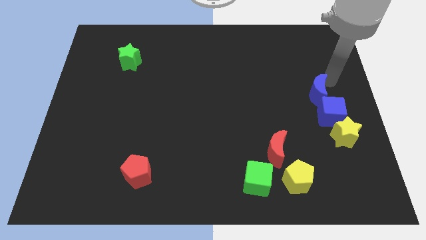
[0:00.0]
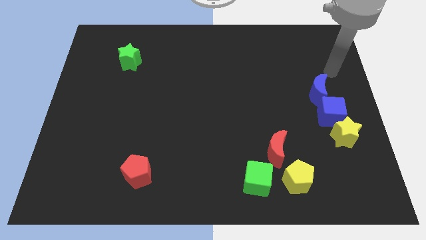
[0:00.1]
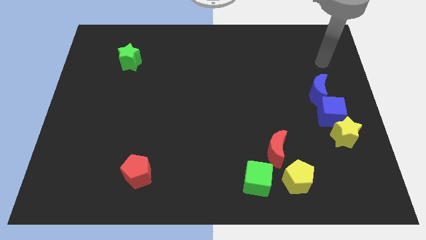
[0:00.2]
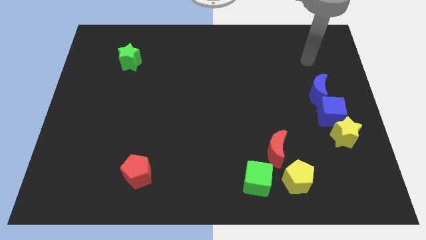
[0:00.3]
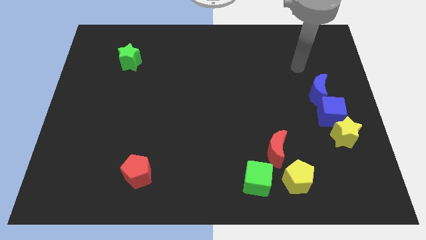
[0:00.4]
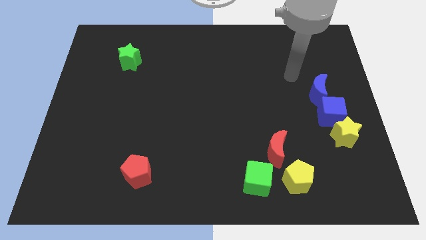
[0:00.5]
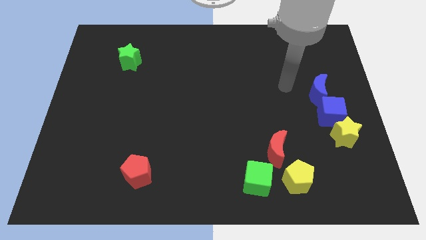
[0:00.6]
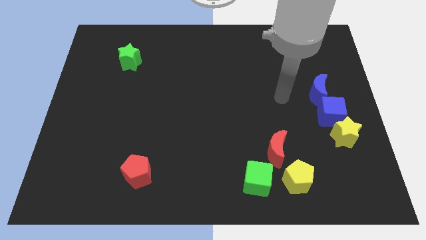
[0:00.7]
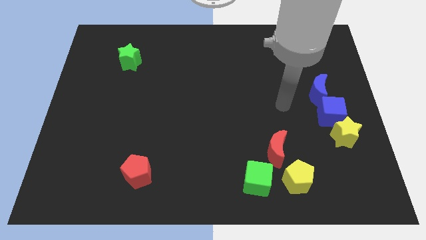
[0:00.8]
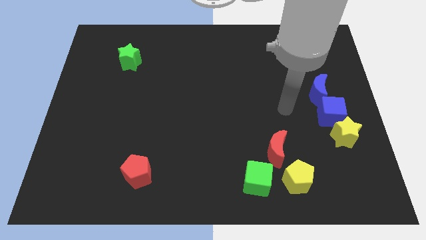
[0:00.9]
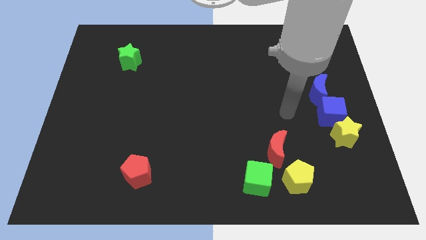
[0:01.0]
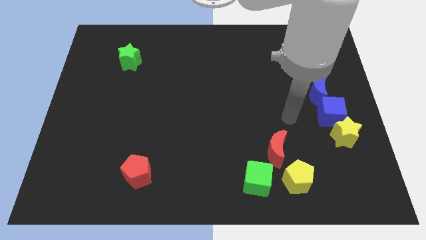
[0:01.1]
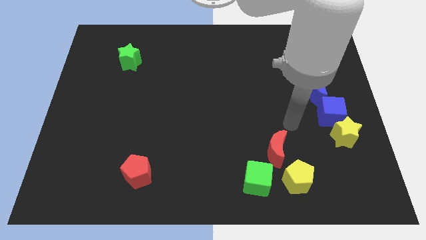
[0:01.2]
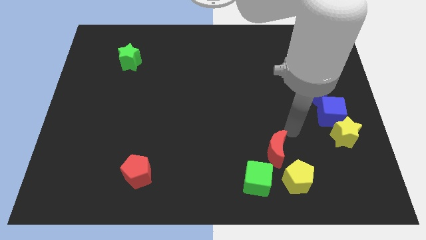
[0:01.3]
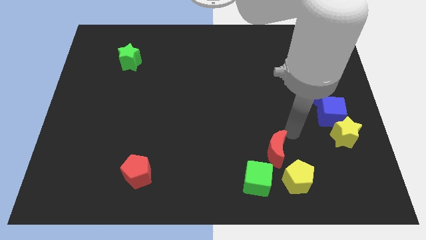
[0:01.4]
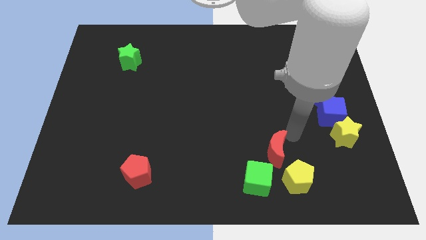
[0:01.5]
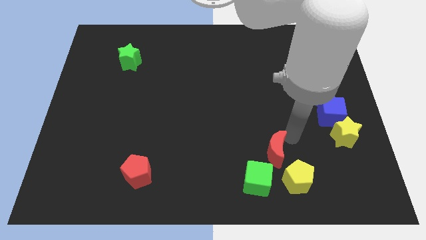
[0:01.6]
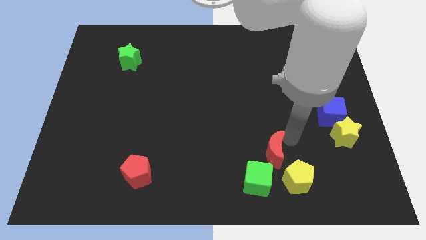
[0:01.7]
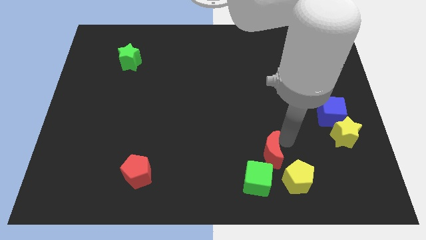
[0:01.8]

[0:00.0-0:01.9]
move the arm towards the red crescent

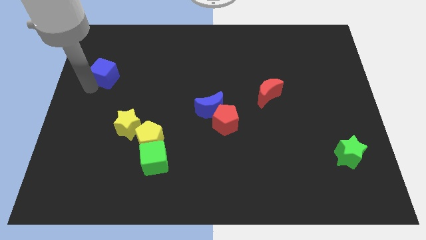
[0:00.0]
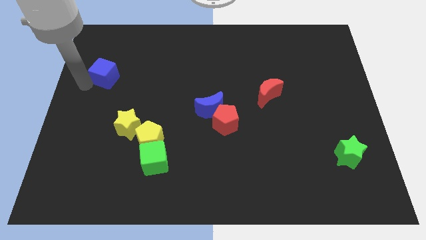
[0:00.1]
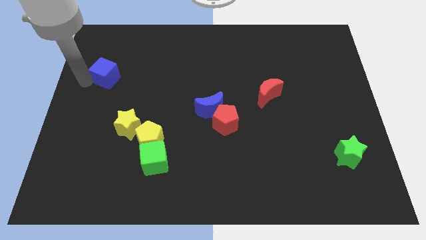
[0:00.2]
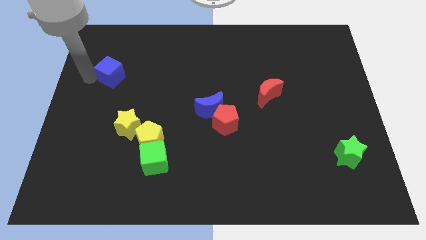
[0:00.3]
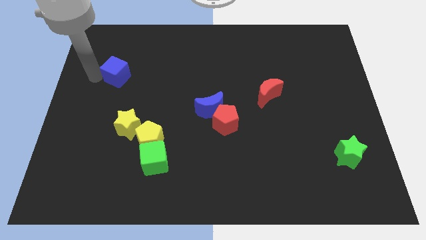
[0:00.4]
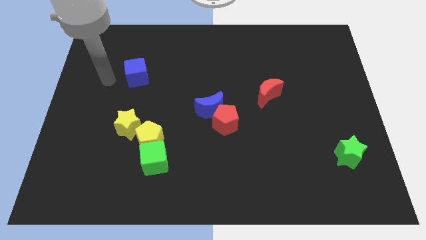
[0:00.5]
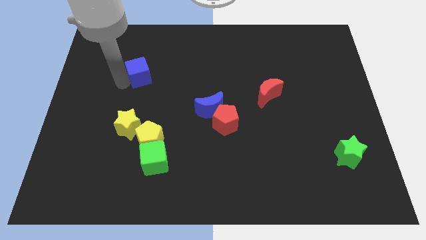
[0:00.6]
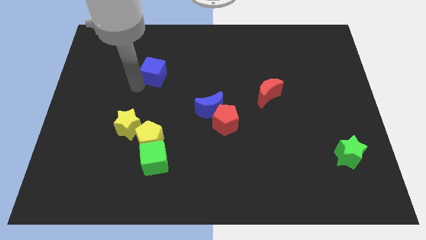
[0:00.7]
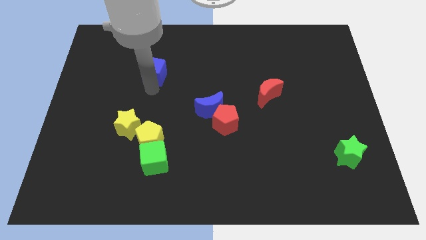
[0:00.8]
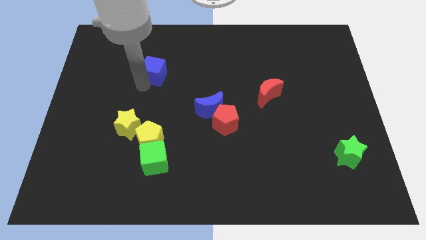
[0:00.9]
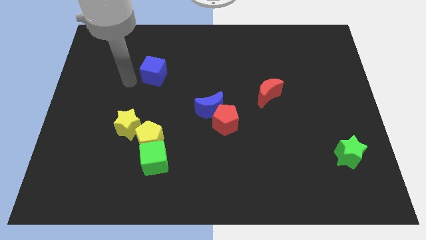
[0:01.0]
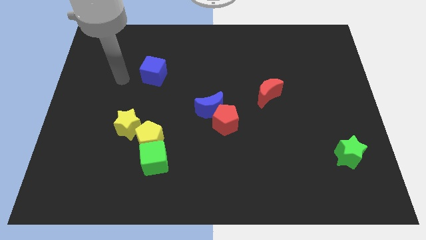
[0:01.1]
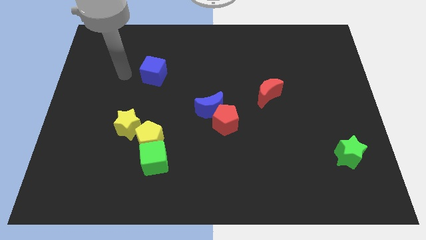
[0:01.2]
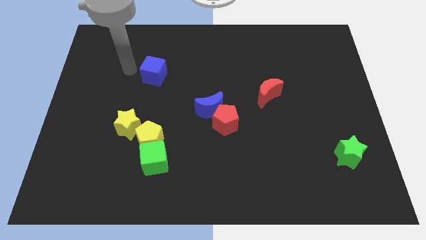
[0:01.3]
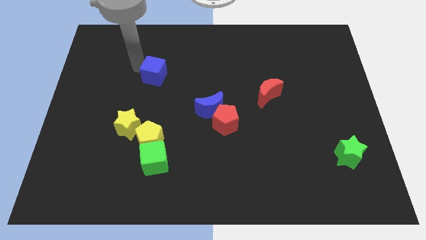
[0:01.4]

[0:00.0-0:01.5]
move the blue cube to the top left of the blue crescent

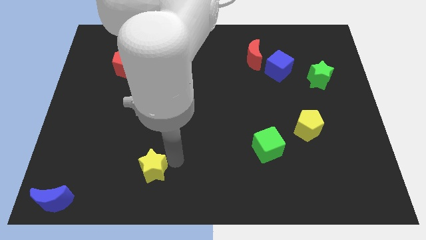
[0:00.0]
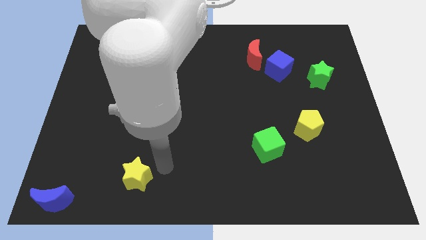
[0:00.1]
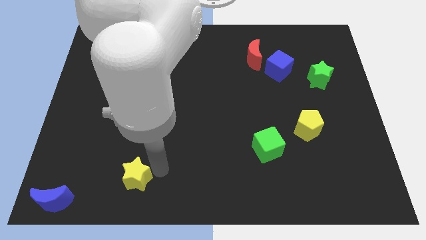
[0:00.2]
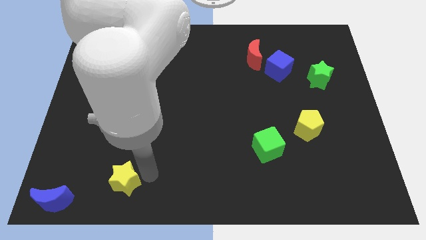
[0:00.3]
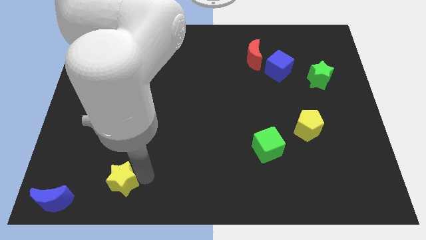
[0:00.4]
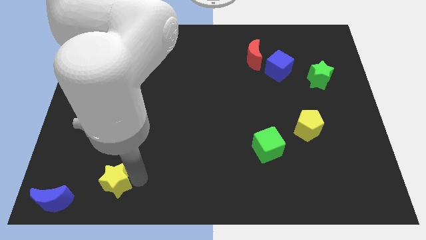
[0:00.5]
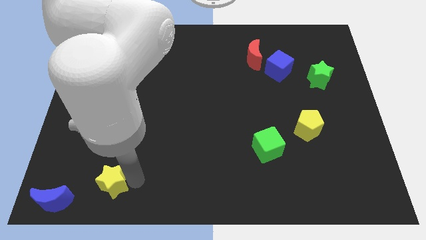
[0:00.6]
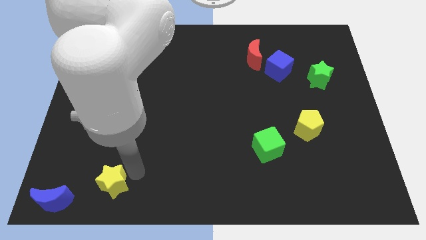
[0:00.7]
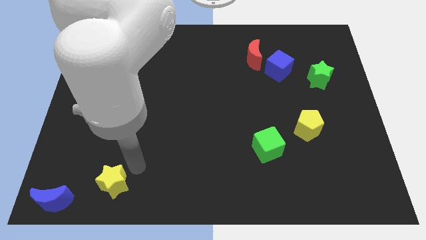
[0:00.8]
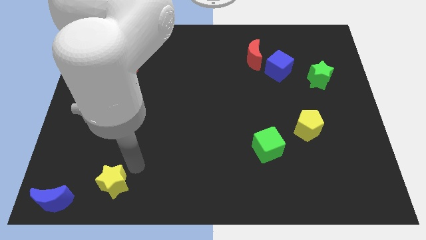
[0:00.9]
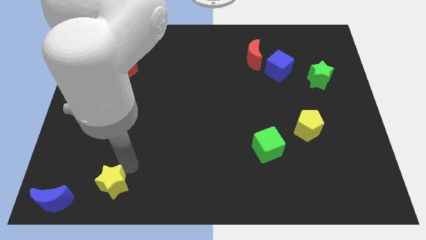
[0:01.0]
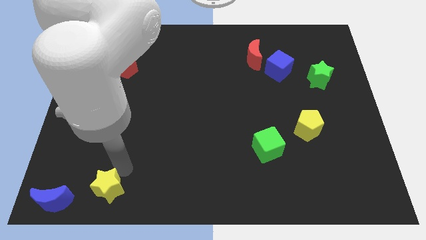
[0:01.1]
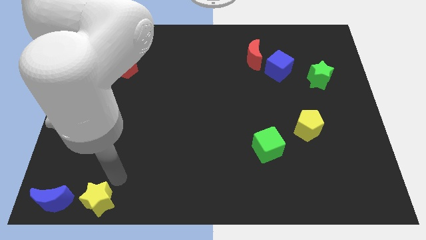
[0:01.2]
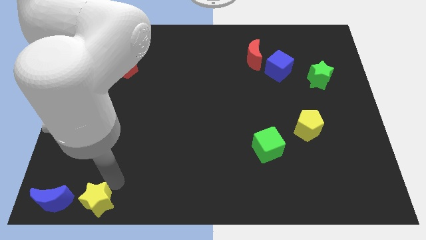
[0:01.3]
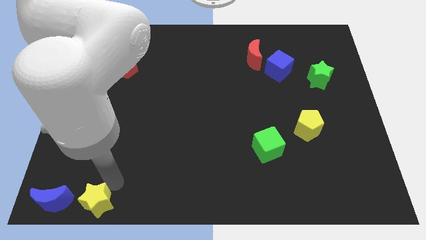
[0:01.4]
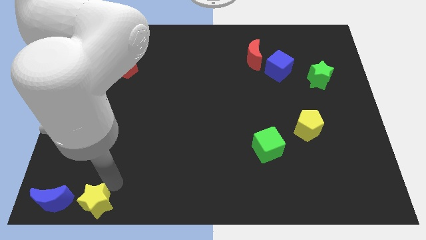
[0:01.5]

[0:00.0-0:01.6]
place the yellow star to the right of the blue moon

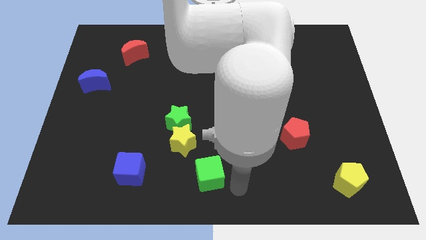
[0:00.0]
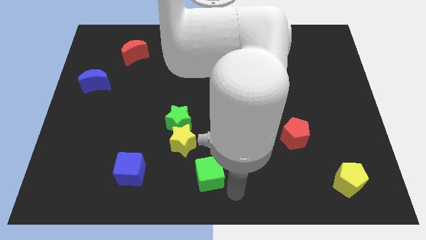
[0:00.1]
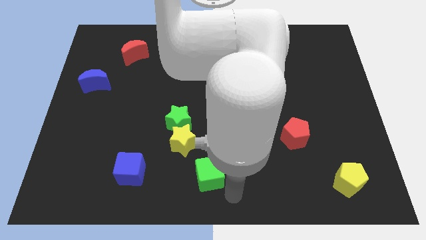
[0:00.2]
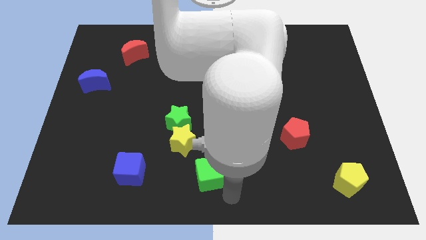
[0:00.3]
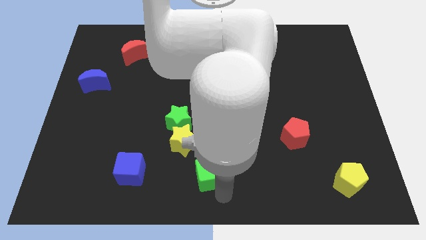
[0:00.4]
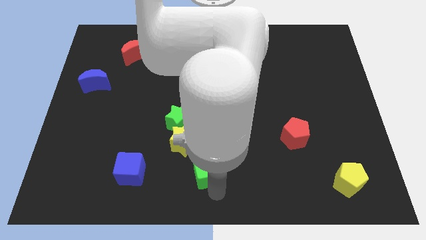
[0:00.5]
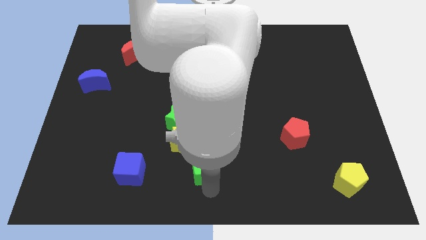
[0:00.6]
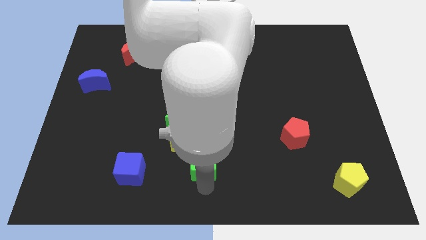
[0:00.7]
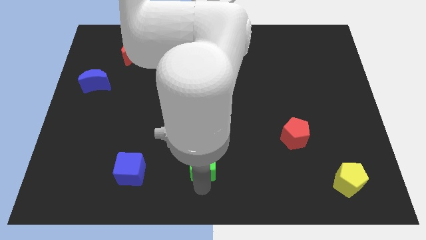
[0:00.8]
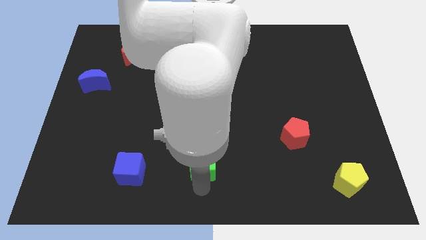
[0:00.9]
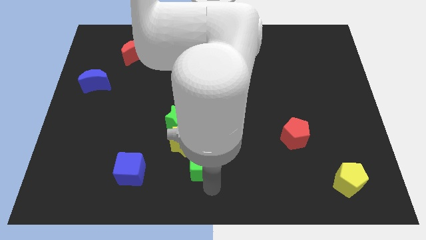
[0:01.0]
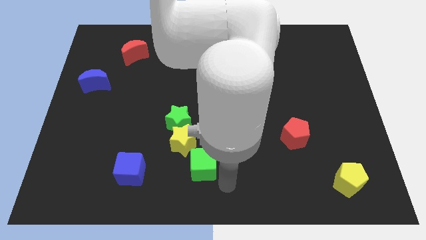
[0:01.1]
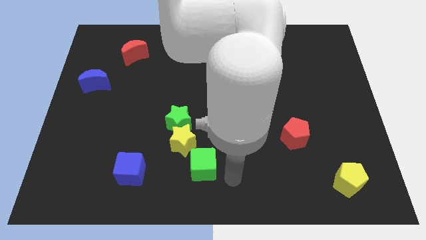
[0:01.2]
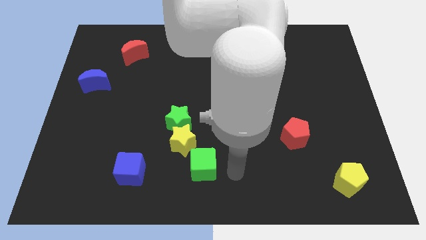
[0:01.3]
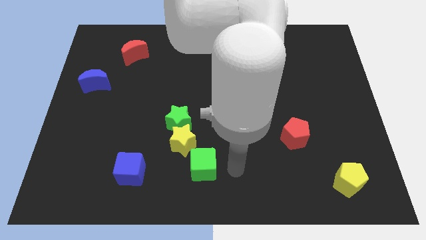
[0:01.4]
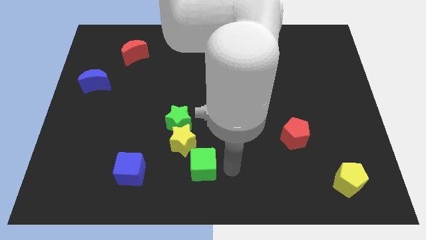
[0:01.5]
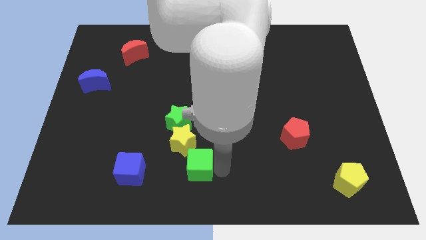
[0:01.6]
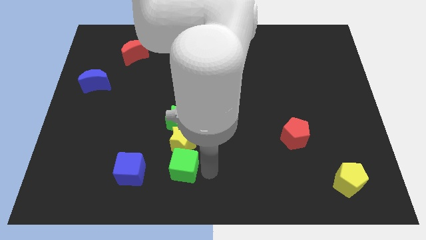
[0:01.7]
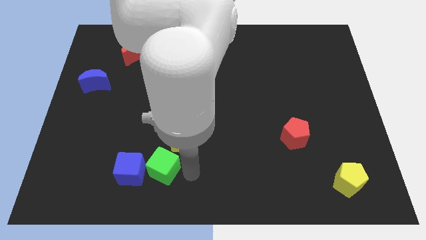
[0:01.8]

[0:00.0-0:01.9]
push tthe green cube into blue cube to the right

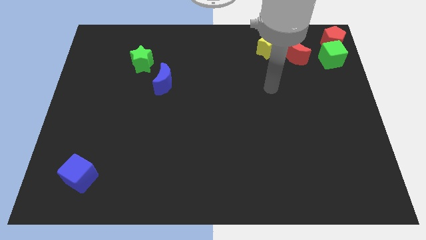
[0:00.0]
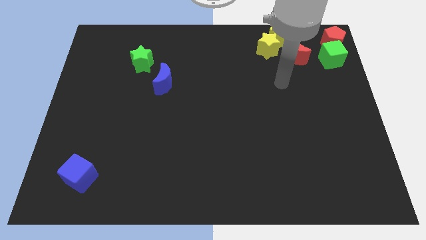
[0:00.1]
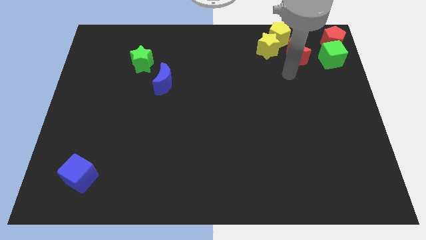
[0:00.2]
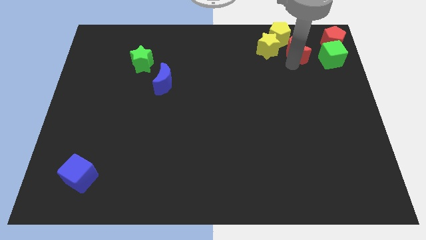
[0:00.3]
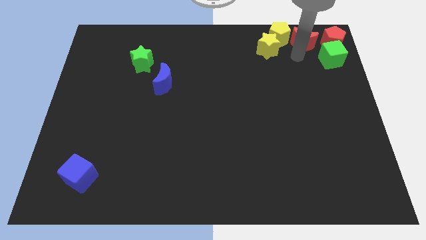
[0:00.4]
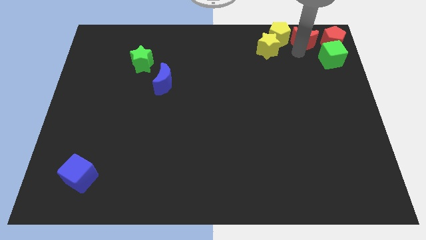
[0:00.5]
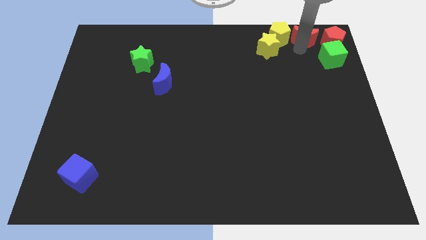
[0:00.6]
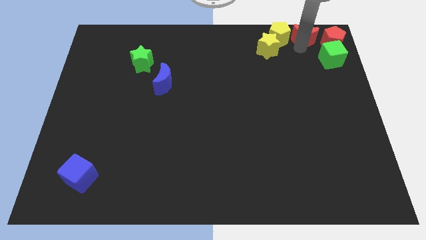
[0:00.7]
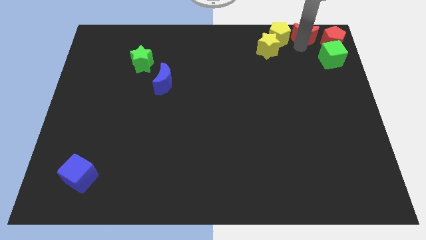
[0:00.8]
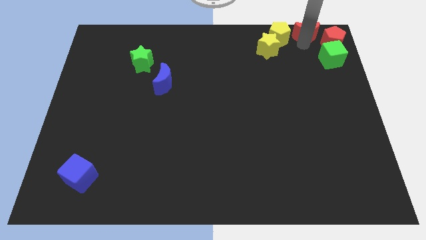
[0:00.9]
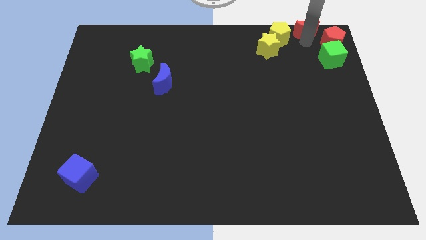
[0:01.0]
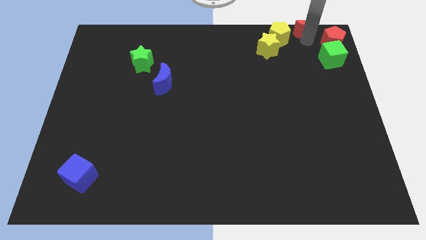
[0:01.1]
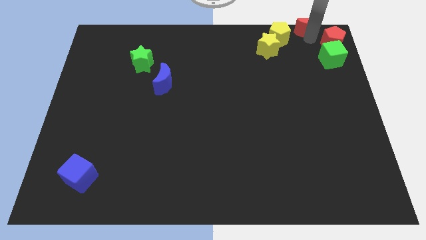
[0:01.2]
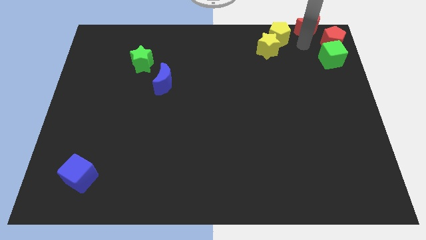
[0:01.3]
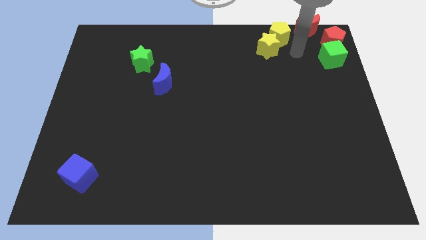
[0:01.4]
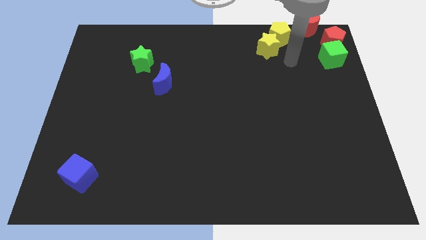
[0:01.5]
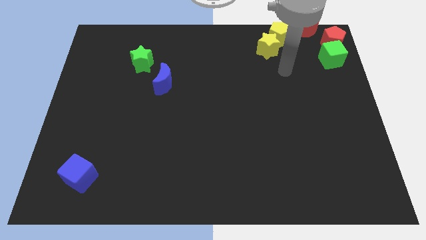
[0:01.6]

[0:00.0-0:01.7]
push the red moon to the right of yellow pentagon

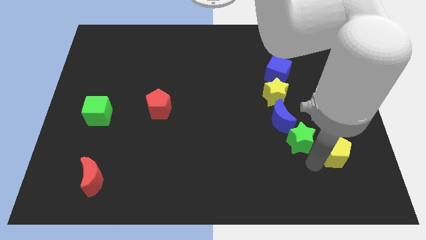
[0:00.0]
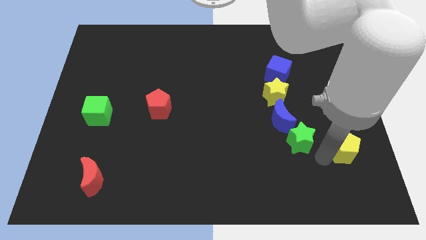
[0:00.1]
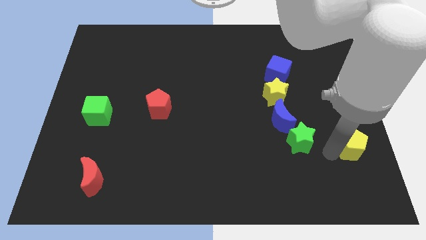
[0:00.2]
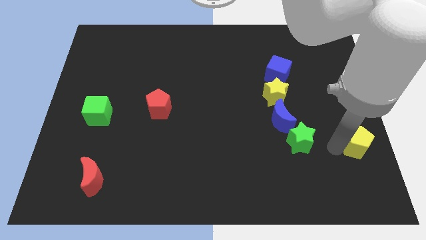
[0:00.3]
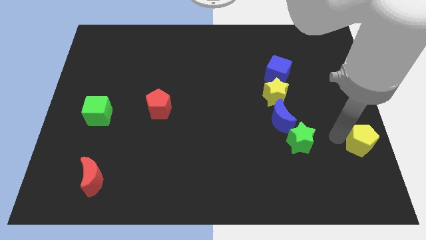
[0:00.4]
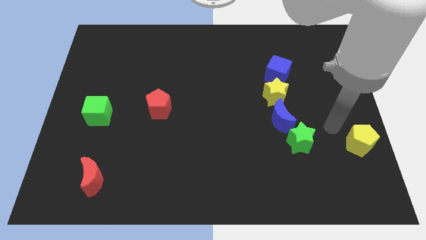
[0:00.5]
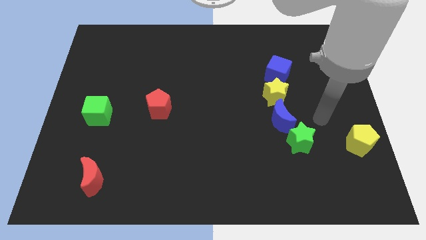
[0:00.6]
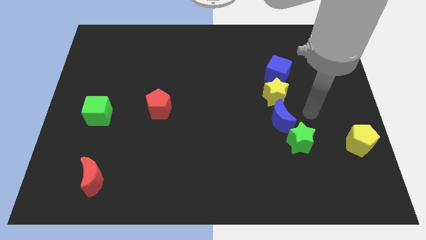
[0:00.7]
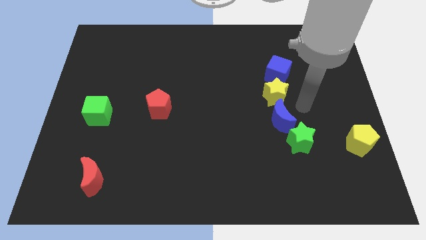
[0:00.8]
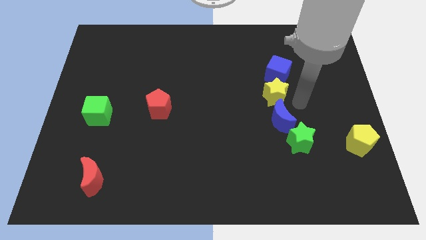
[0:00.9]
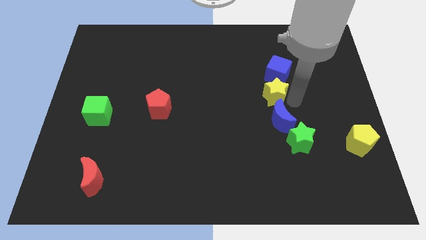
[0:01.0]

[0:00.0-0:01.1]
place the yellow pentagon right to the green star
